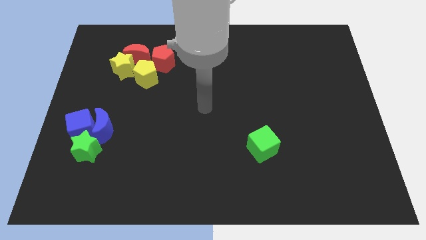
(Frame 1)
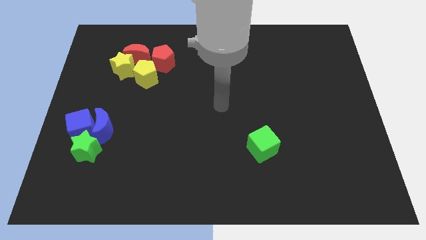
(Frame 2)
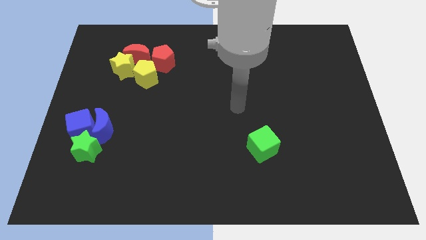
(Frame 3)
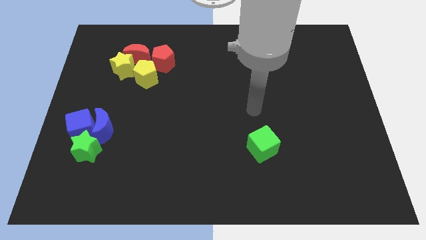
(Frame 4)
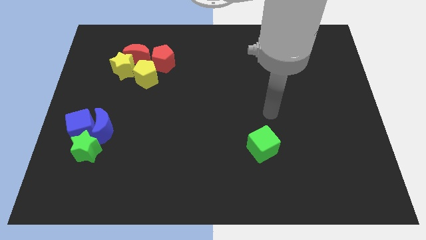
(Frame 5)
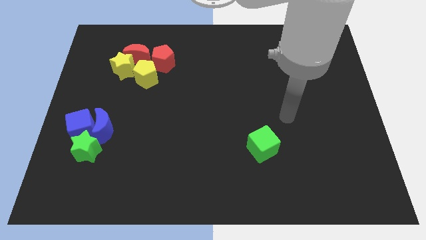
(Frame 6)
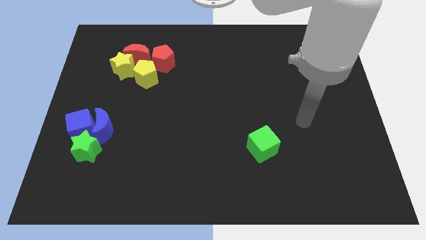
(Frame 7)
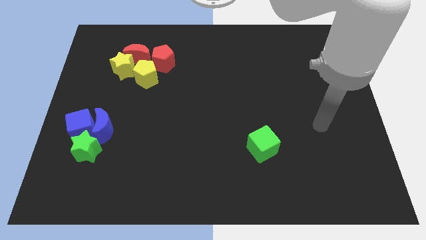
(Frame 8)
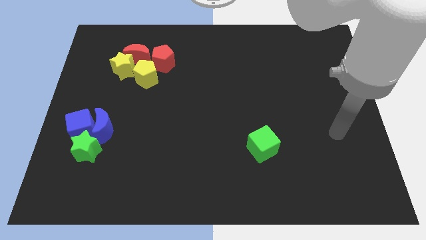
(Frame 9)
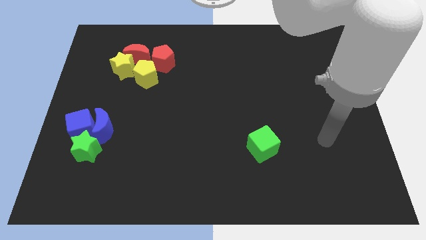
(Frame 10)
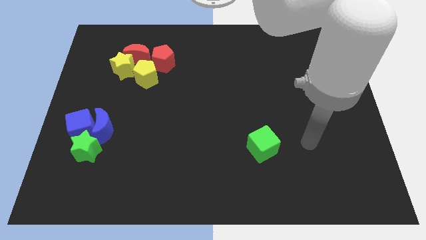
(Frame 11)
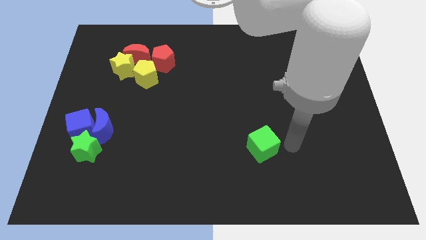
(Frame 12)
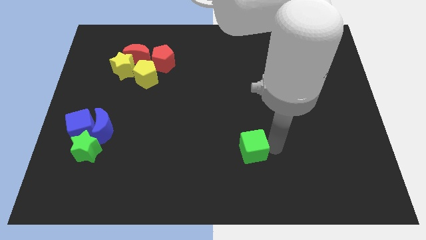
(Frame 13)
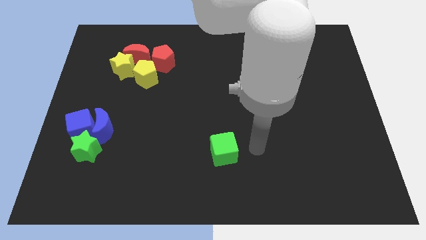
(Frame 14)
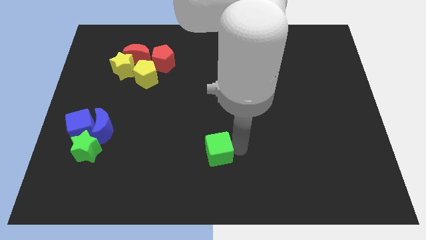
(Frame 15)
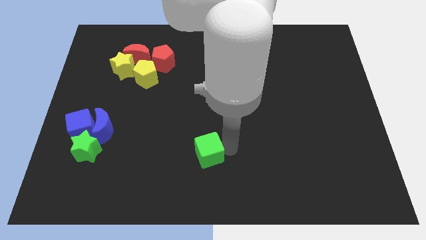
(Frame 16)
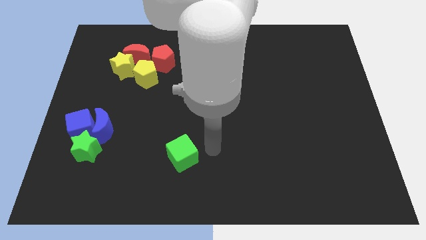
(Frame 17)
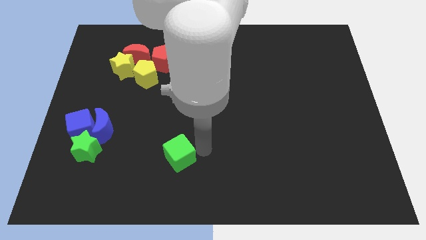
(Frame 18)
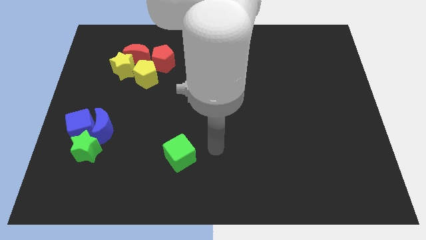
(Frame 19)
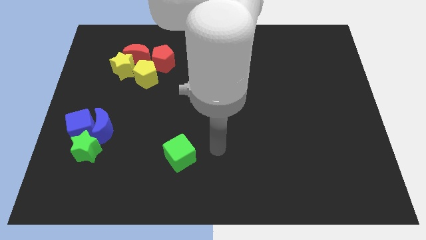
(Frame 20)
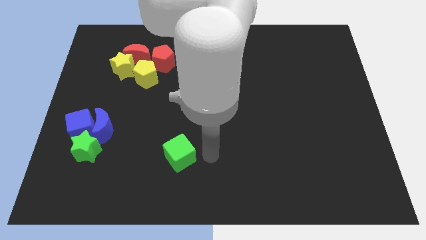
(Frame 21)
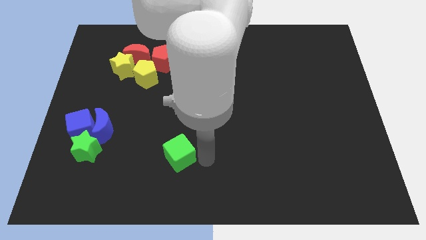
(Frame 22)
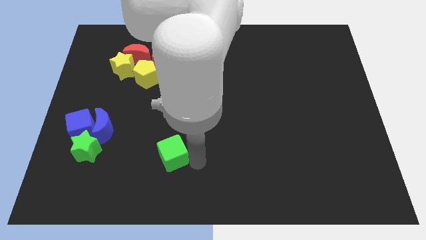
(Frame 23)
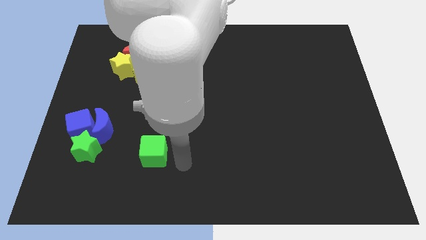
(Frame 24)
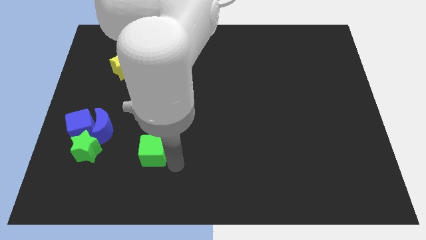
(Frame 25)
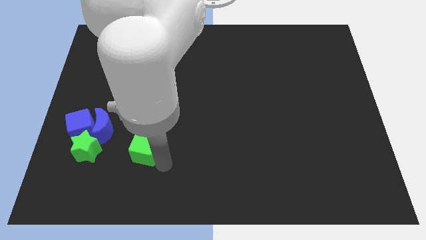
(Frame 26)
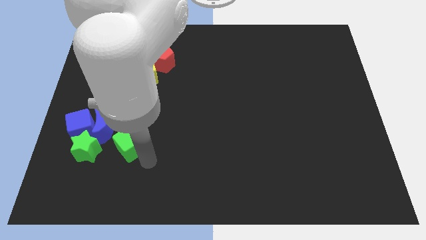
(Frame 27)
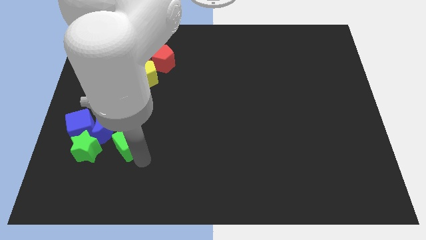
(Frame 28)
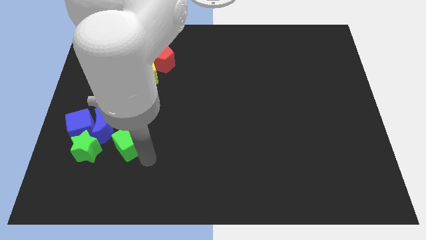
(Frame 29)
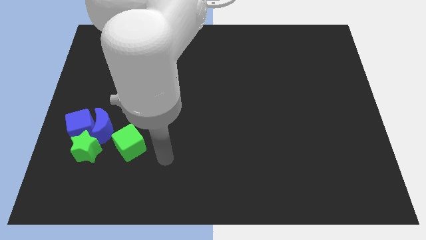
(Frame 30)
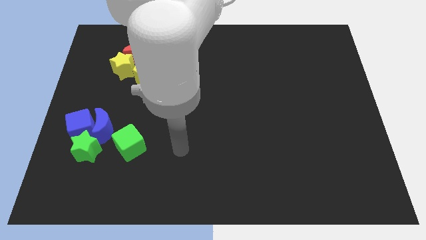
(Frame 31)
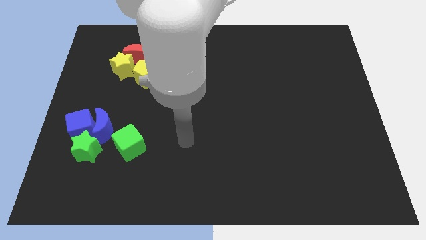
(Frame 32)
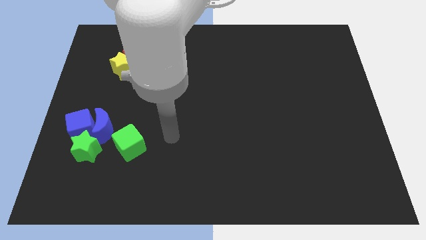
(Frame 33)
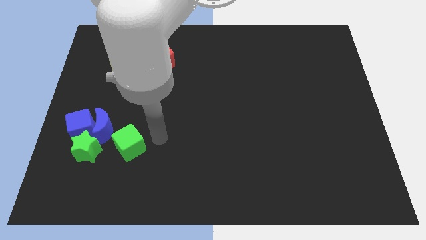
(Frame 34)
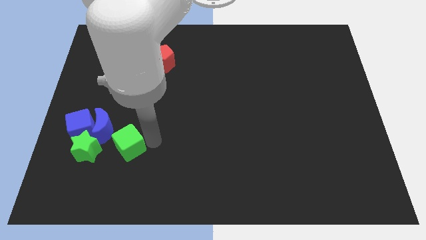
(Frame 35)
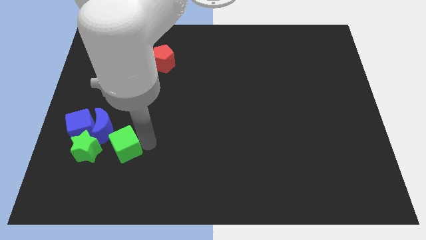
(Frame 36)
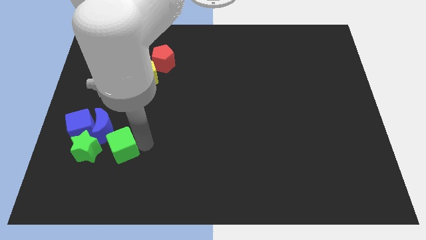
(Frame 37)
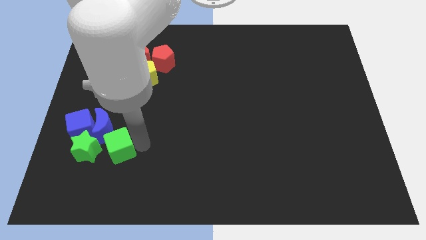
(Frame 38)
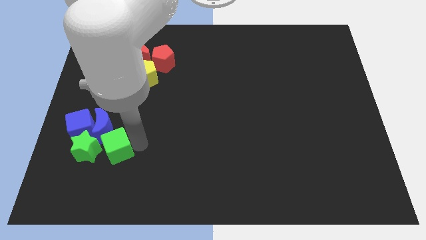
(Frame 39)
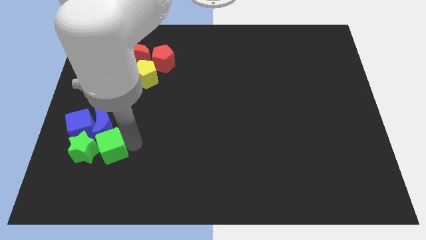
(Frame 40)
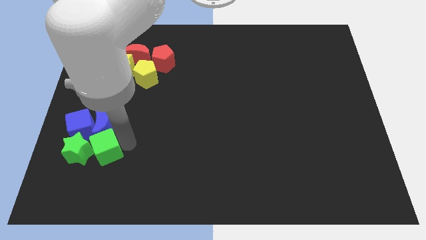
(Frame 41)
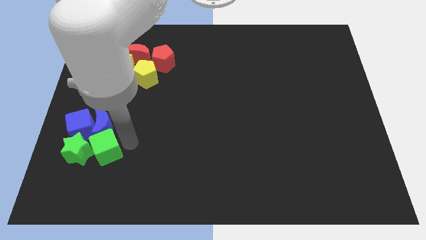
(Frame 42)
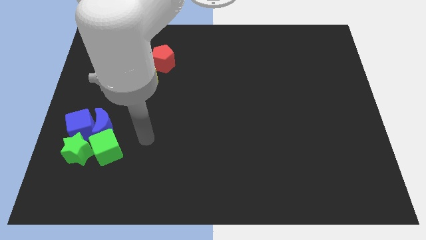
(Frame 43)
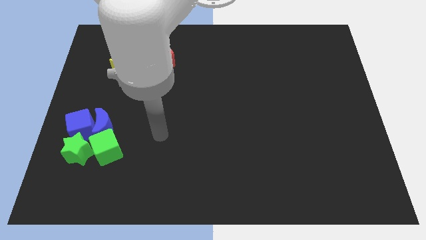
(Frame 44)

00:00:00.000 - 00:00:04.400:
add green cube into green star

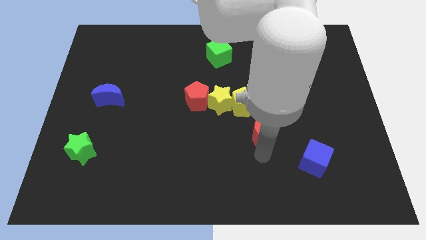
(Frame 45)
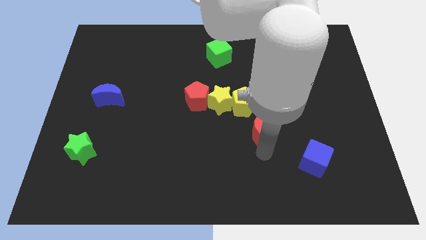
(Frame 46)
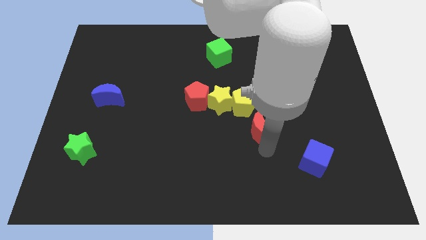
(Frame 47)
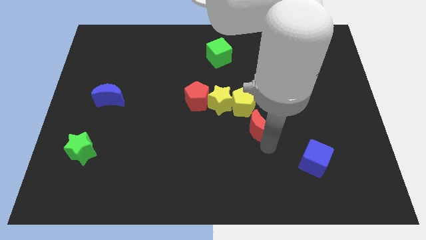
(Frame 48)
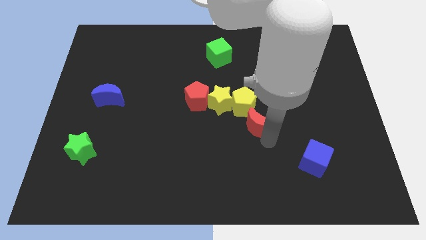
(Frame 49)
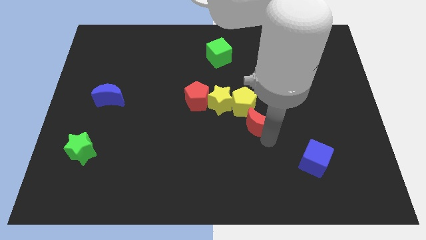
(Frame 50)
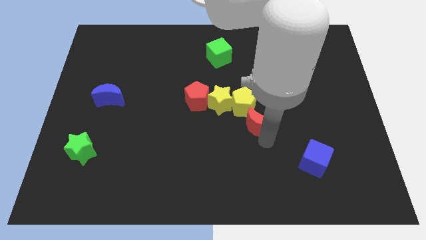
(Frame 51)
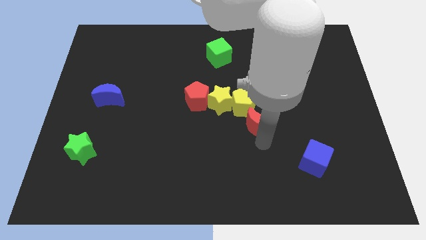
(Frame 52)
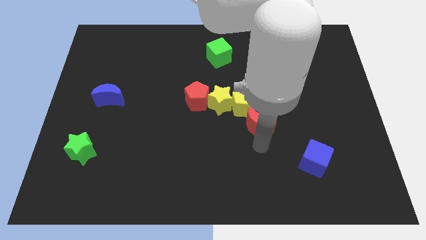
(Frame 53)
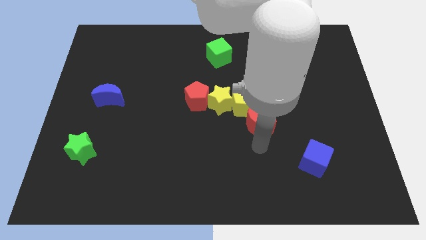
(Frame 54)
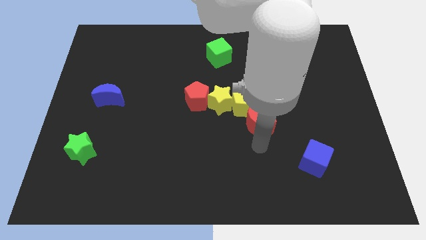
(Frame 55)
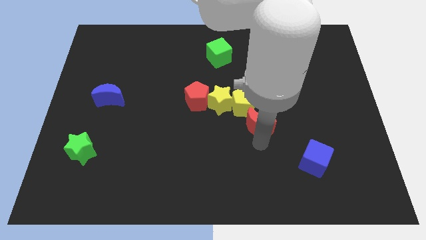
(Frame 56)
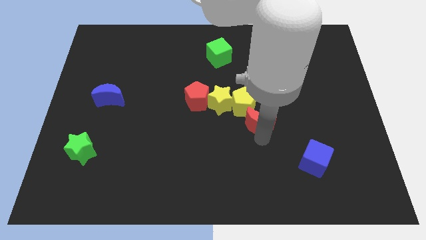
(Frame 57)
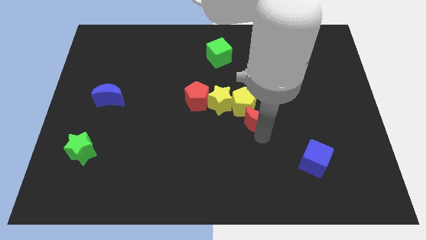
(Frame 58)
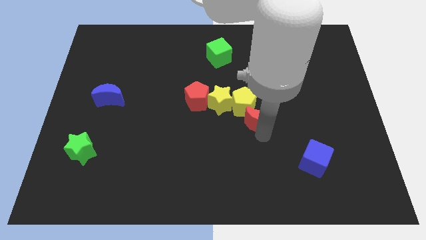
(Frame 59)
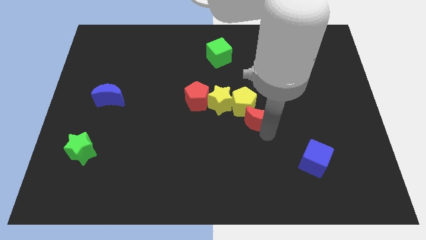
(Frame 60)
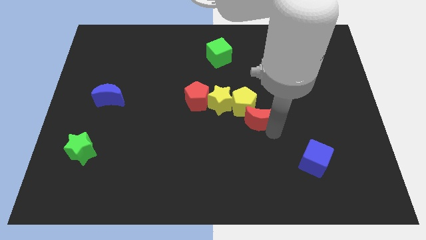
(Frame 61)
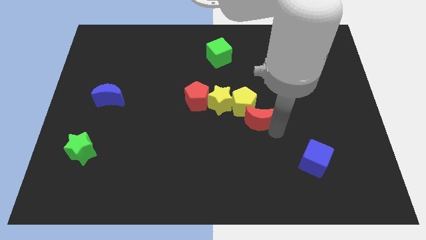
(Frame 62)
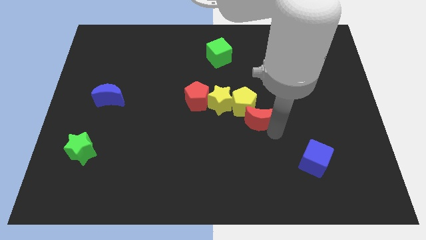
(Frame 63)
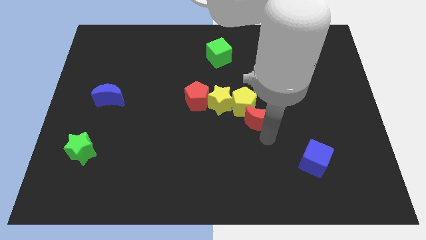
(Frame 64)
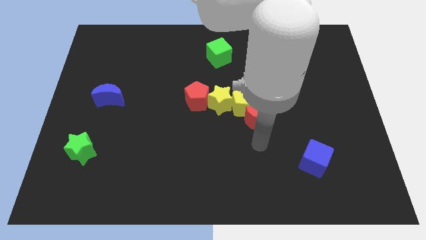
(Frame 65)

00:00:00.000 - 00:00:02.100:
place the red crescent into the yellow pentagon

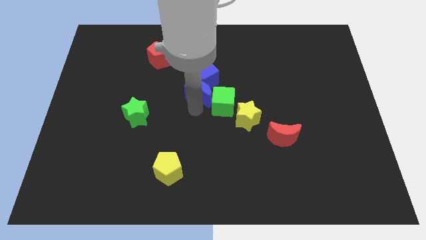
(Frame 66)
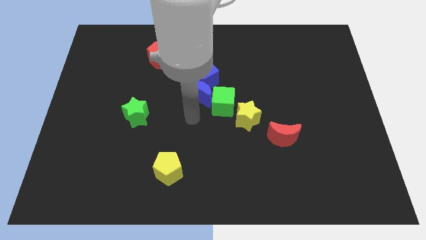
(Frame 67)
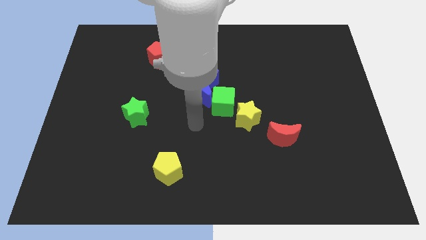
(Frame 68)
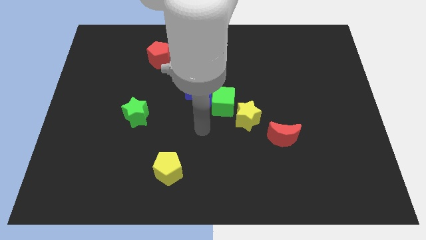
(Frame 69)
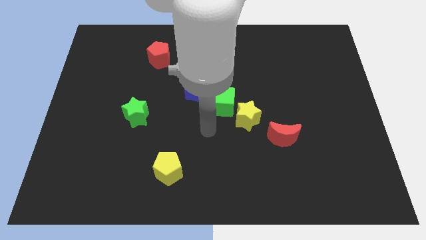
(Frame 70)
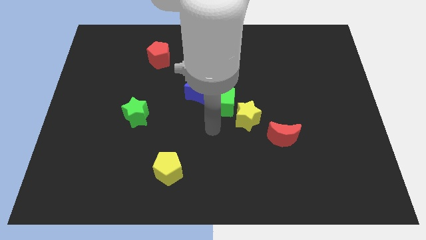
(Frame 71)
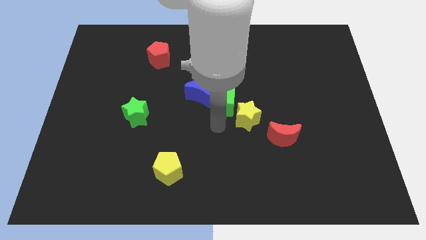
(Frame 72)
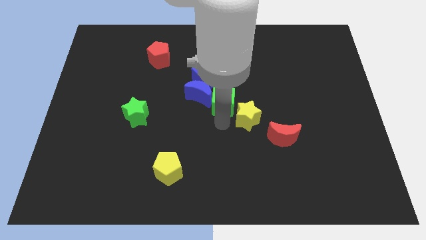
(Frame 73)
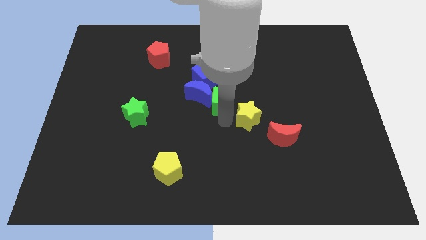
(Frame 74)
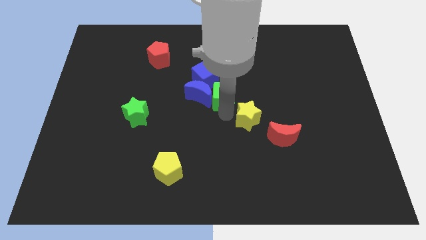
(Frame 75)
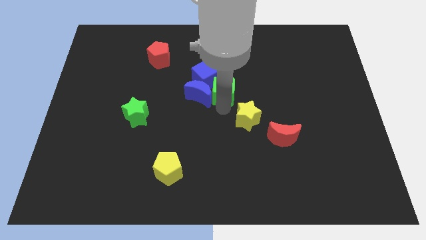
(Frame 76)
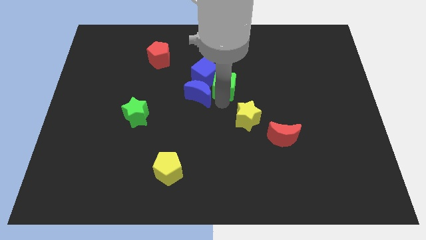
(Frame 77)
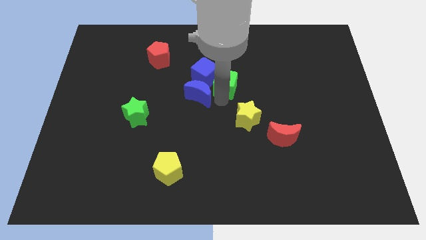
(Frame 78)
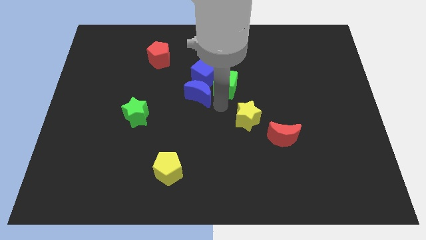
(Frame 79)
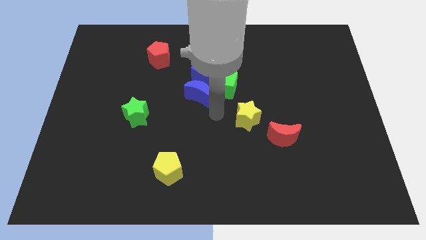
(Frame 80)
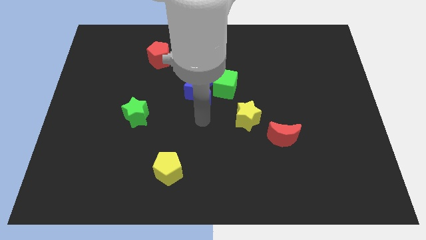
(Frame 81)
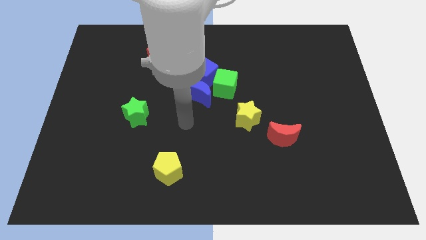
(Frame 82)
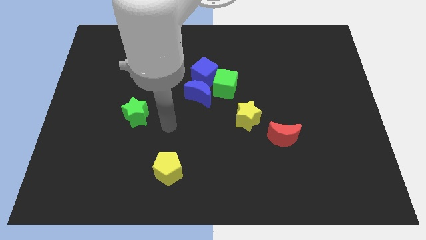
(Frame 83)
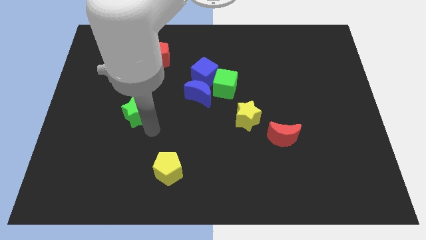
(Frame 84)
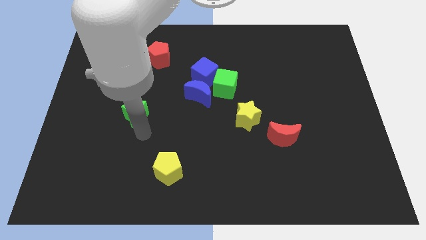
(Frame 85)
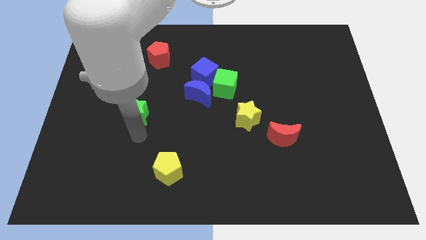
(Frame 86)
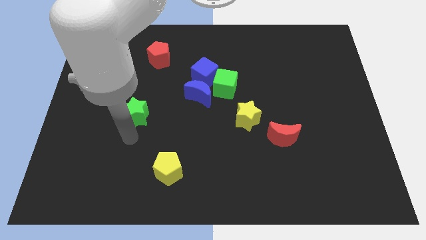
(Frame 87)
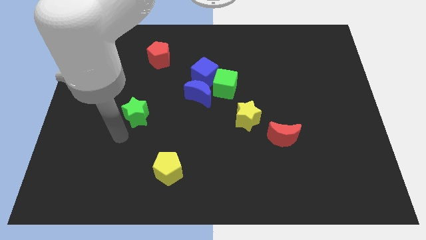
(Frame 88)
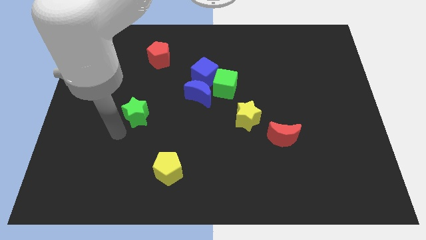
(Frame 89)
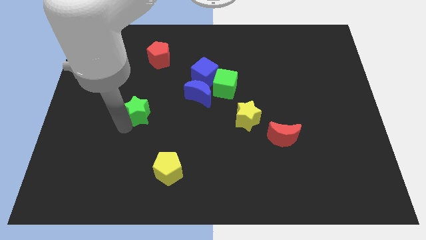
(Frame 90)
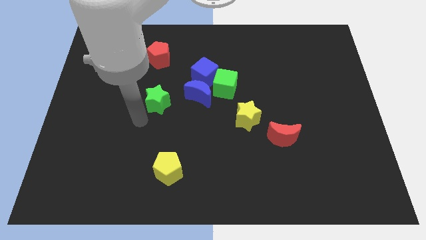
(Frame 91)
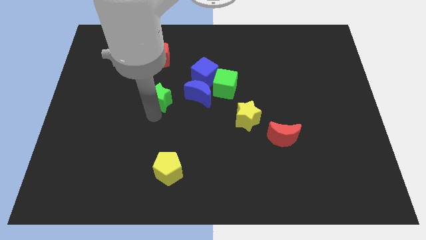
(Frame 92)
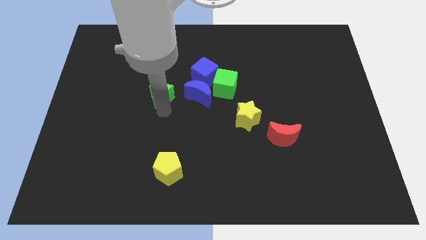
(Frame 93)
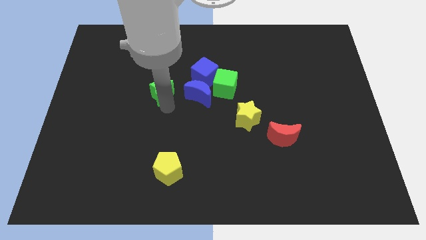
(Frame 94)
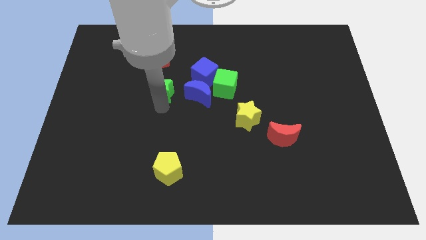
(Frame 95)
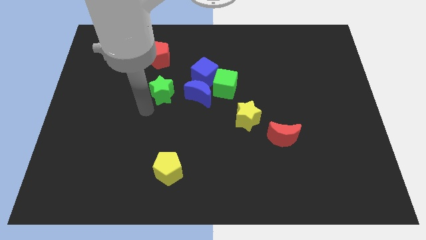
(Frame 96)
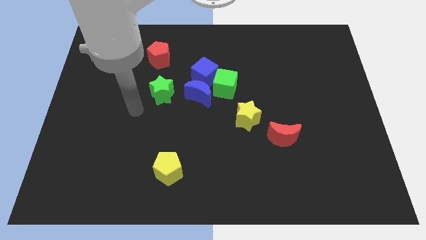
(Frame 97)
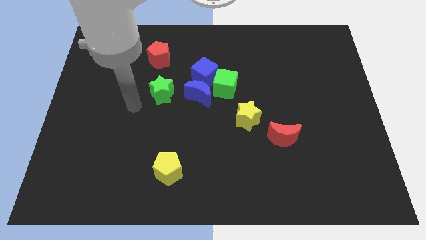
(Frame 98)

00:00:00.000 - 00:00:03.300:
place the green star left to the blue moon
